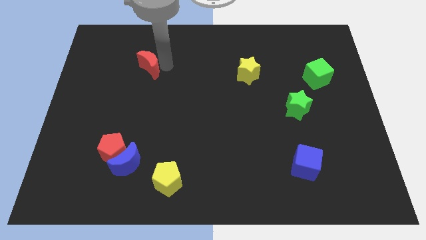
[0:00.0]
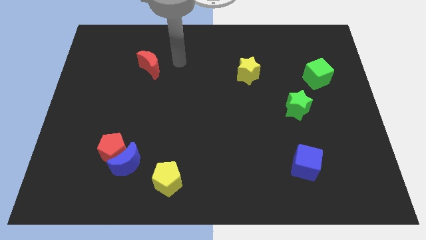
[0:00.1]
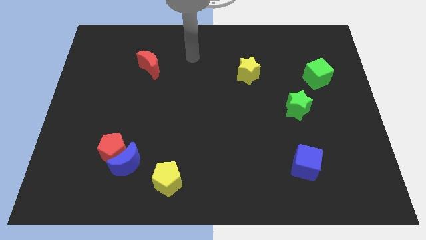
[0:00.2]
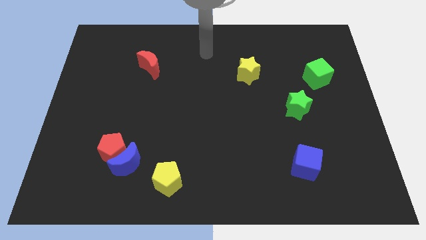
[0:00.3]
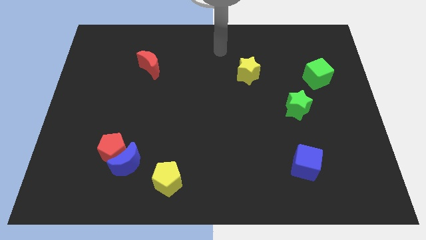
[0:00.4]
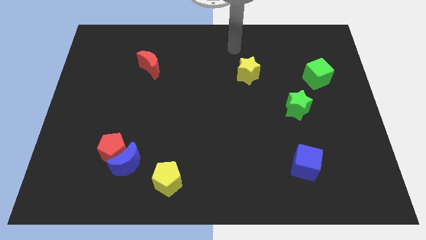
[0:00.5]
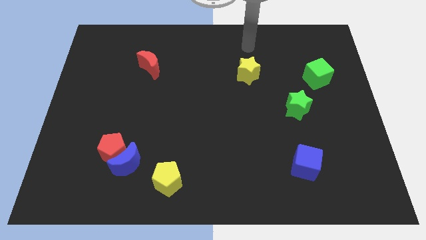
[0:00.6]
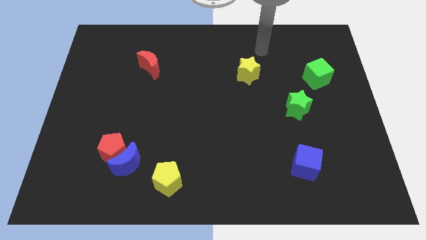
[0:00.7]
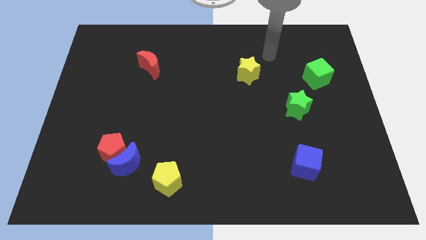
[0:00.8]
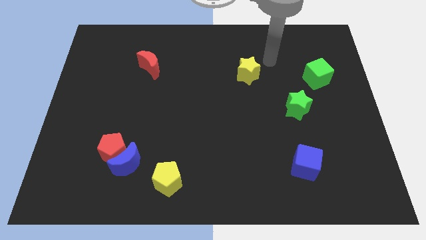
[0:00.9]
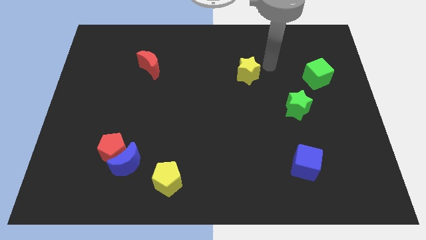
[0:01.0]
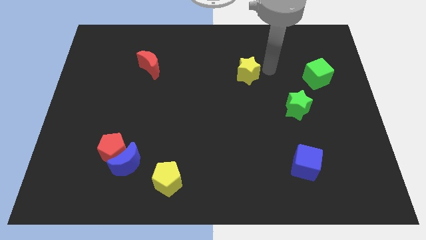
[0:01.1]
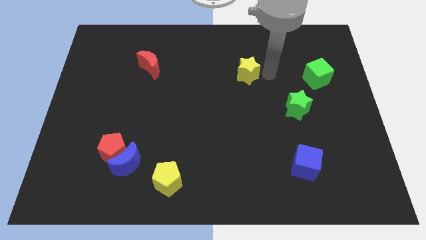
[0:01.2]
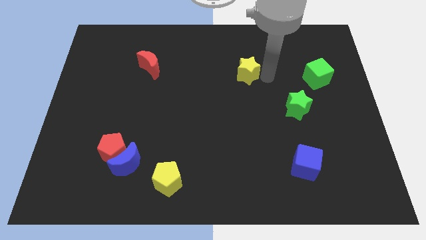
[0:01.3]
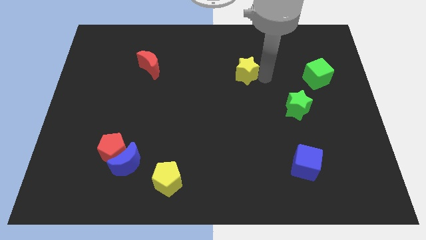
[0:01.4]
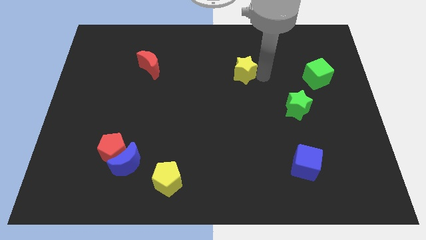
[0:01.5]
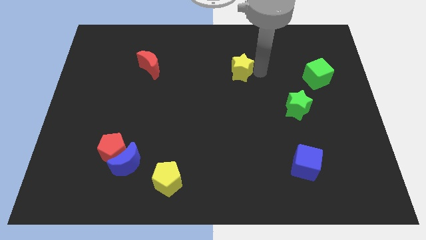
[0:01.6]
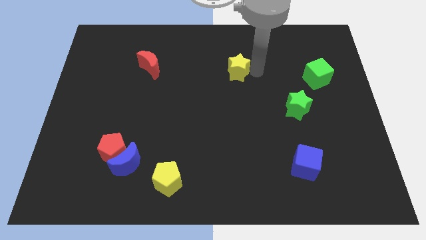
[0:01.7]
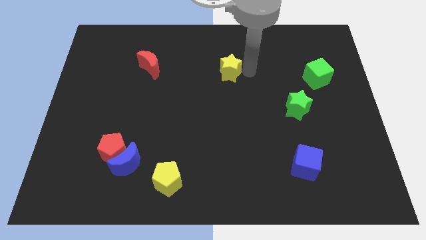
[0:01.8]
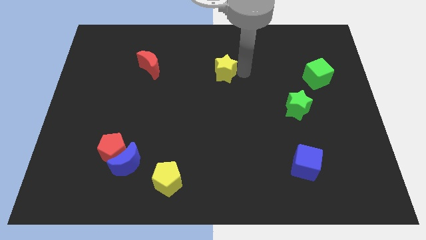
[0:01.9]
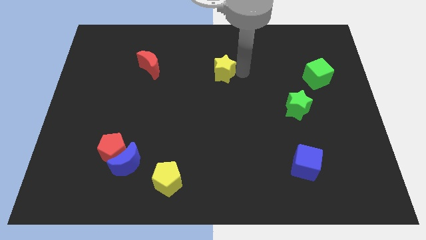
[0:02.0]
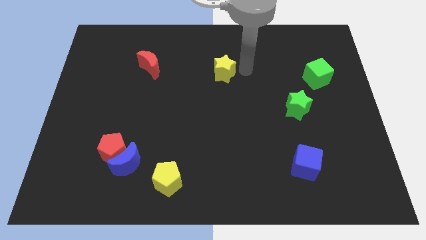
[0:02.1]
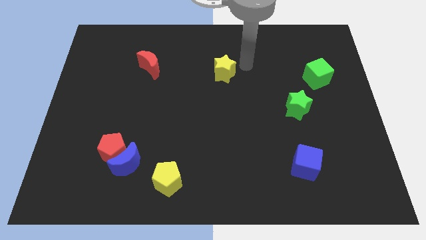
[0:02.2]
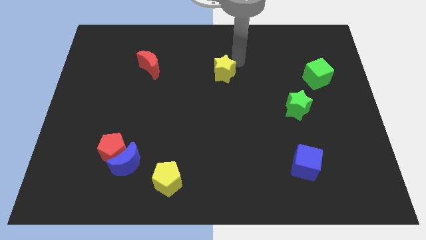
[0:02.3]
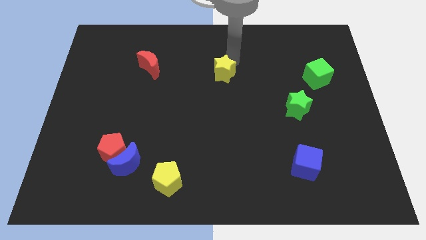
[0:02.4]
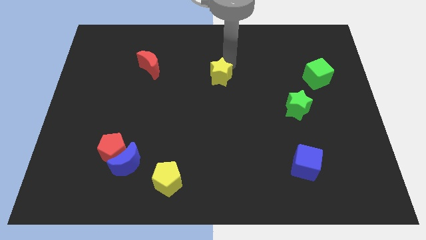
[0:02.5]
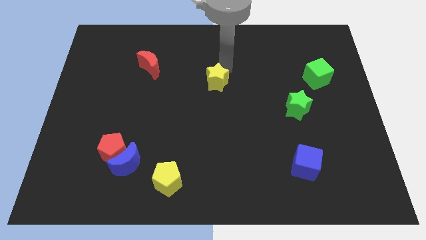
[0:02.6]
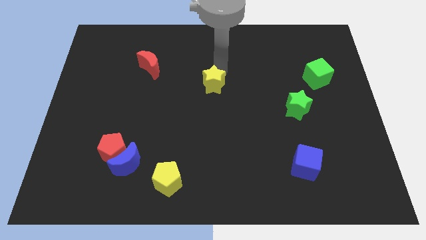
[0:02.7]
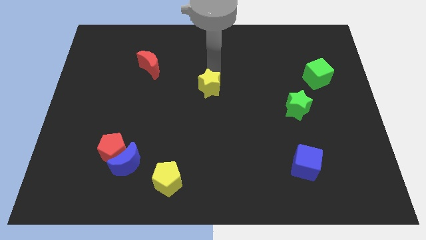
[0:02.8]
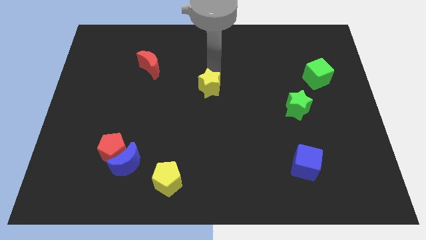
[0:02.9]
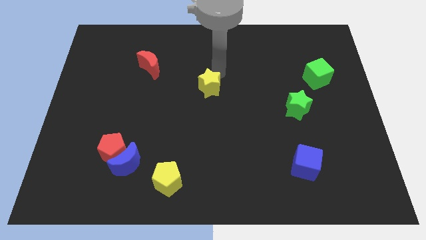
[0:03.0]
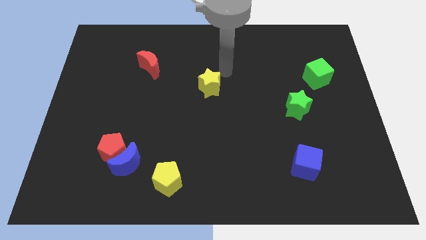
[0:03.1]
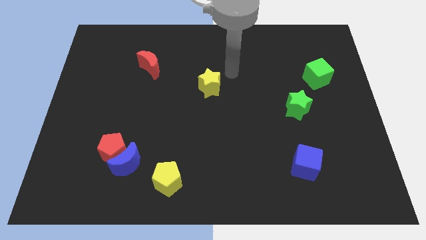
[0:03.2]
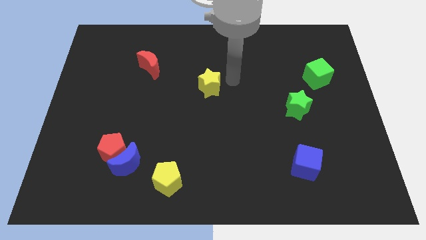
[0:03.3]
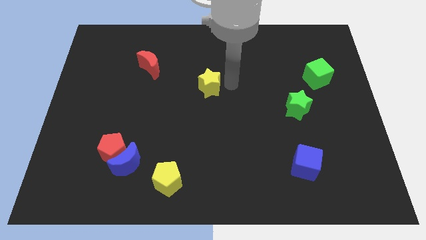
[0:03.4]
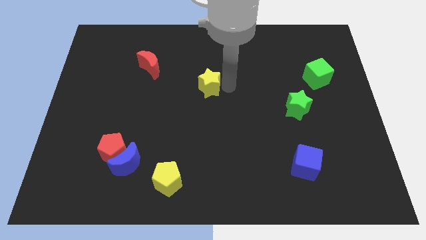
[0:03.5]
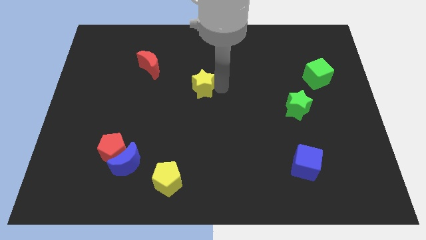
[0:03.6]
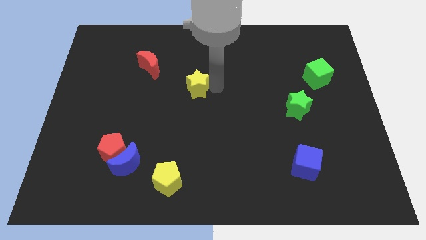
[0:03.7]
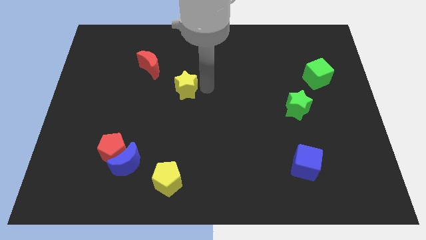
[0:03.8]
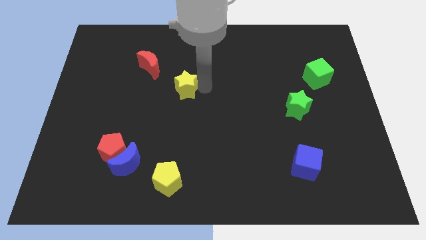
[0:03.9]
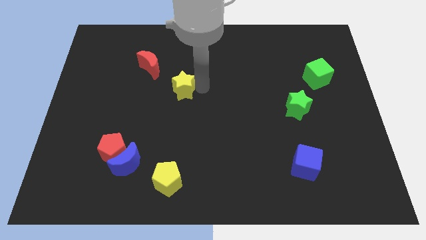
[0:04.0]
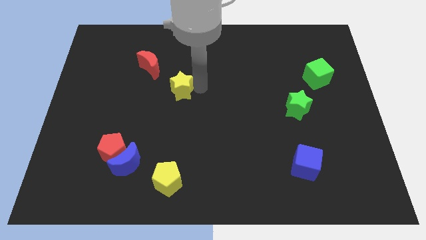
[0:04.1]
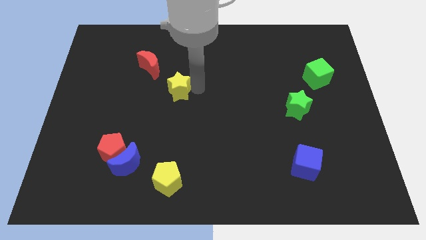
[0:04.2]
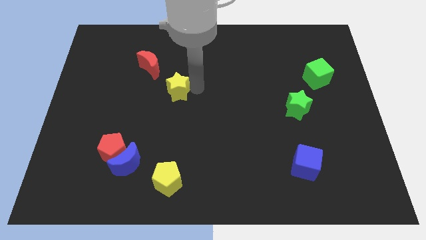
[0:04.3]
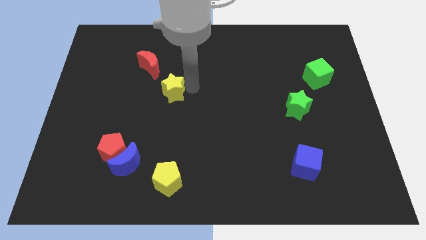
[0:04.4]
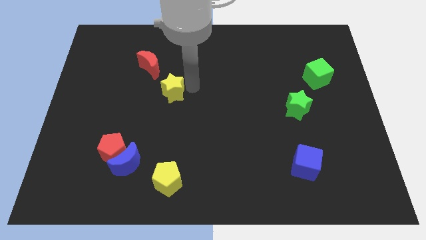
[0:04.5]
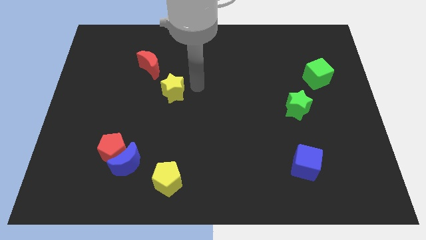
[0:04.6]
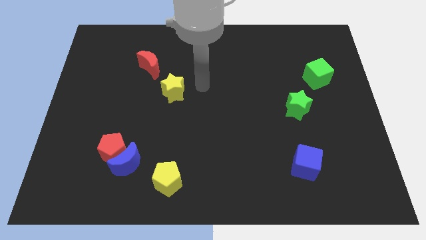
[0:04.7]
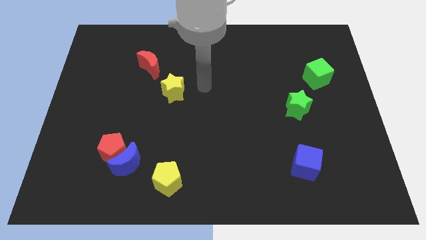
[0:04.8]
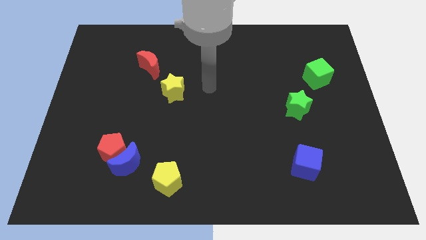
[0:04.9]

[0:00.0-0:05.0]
place the yellow star in a diagonal position to the red moon

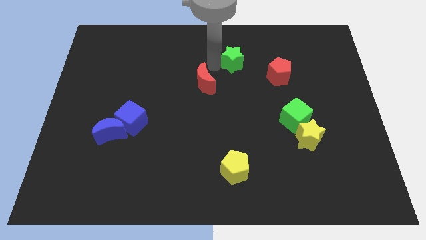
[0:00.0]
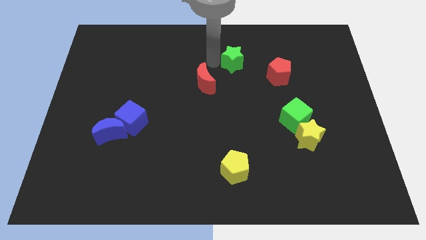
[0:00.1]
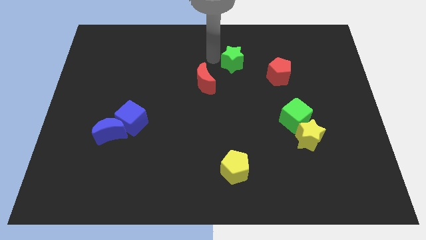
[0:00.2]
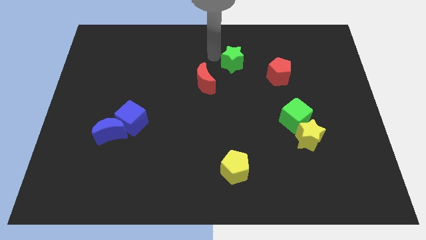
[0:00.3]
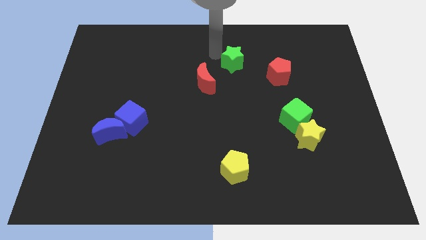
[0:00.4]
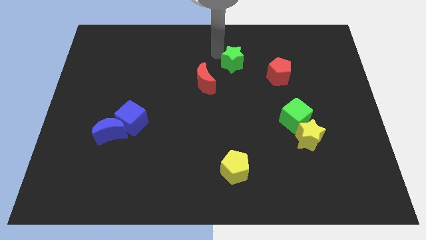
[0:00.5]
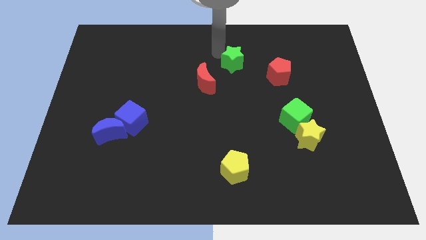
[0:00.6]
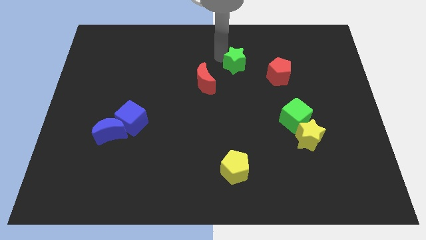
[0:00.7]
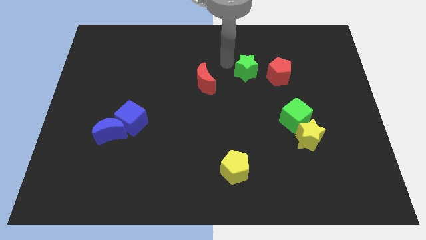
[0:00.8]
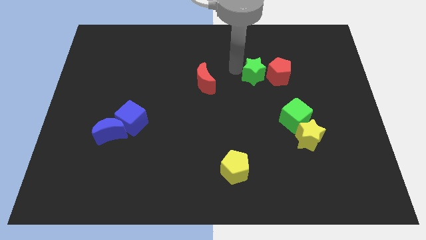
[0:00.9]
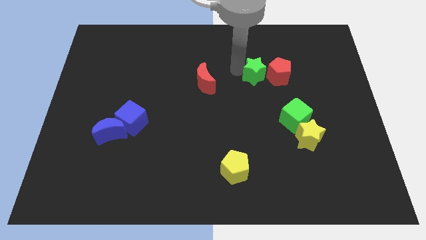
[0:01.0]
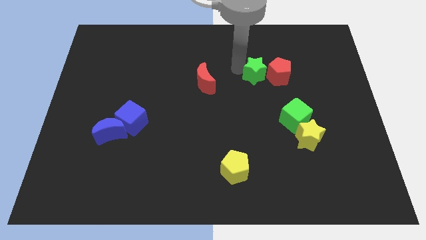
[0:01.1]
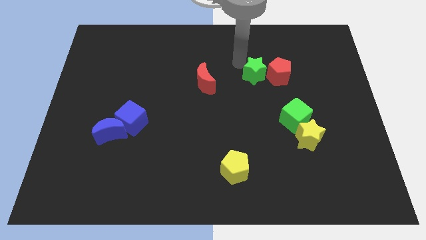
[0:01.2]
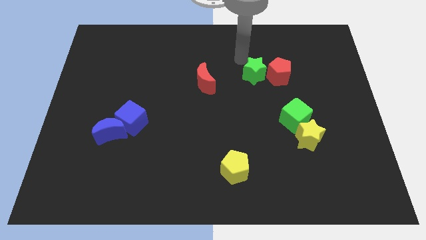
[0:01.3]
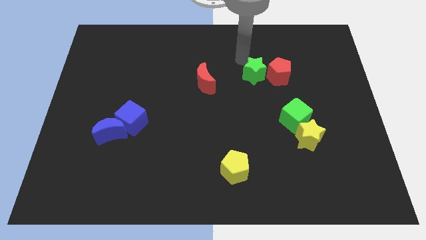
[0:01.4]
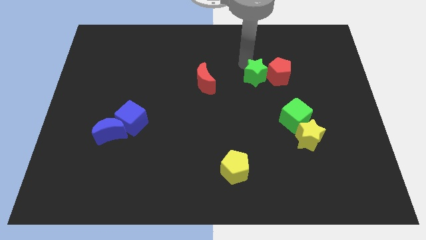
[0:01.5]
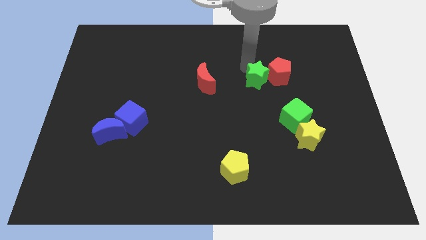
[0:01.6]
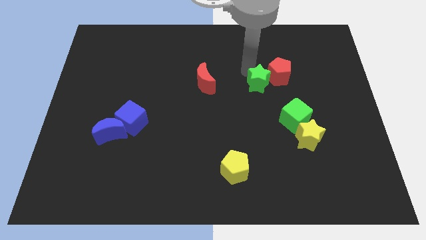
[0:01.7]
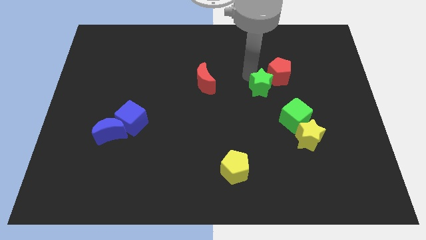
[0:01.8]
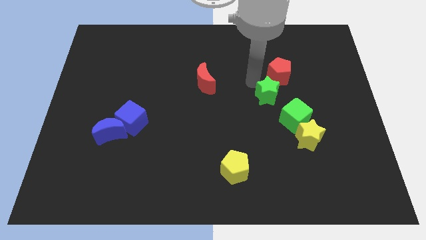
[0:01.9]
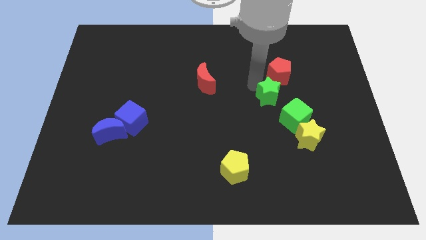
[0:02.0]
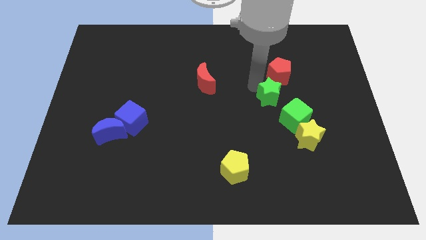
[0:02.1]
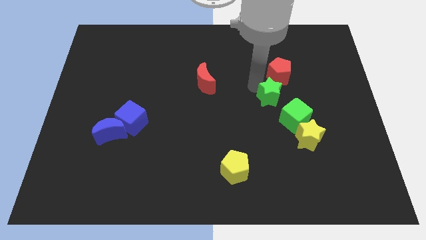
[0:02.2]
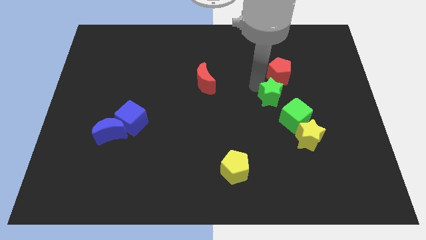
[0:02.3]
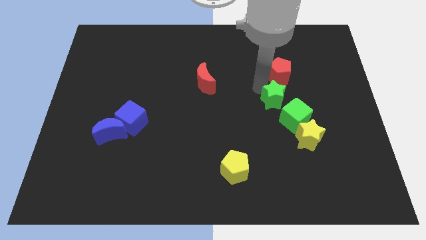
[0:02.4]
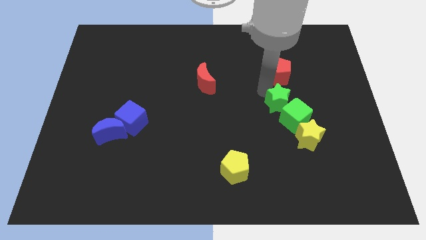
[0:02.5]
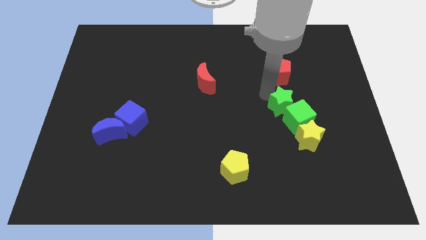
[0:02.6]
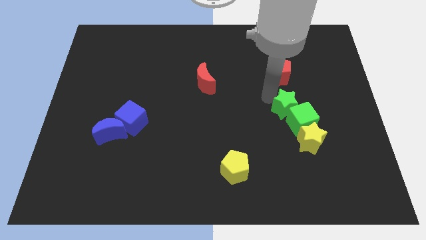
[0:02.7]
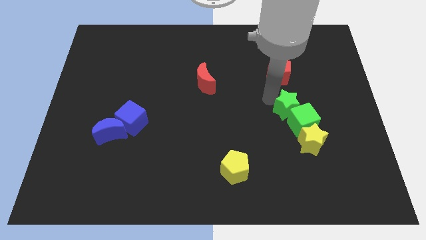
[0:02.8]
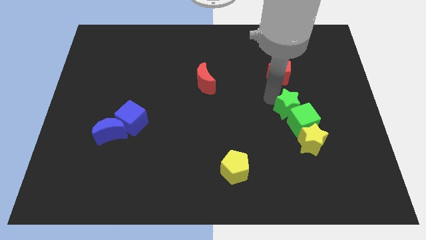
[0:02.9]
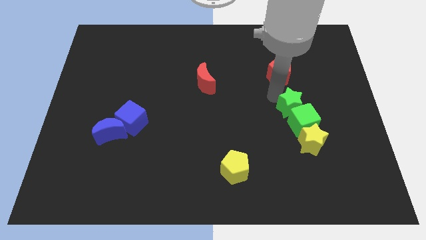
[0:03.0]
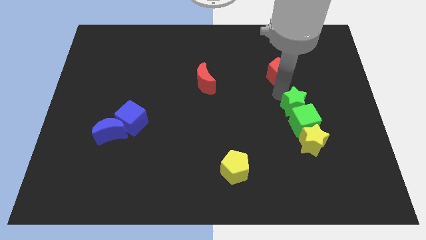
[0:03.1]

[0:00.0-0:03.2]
push the green star into the green cube

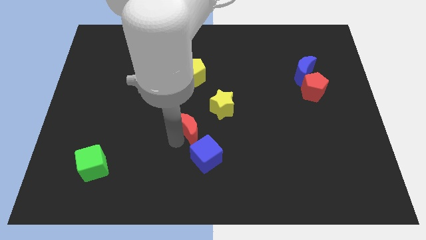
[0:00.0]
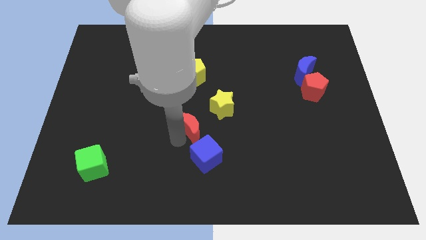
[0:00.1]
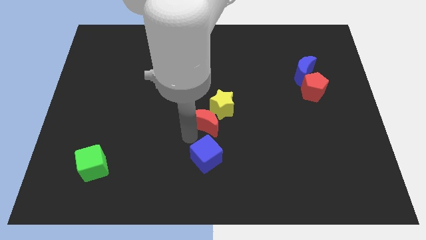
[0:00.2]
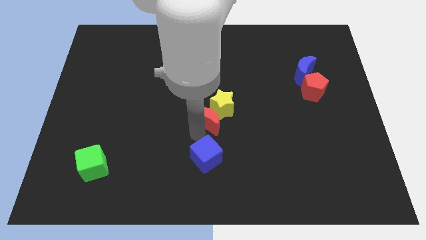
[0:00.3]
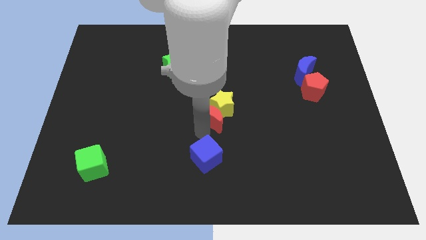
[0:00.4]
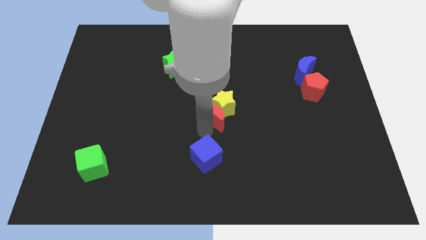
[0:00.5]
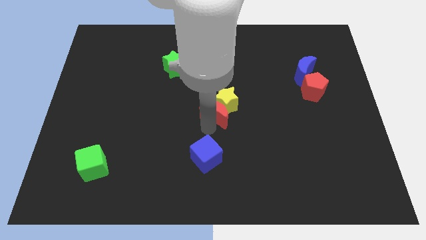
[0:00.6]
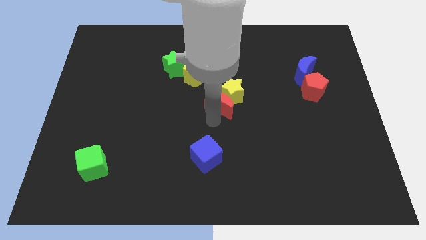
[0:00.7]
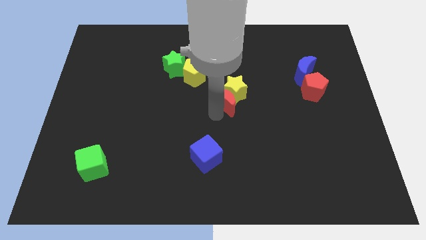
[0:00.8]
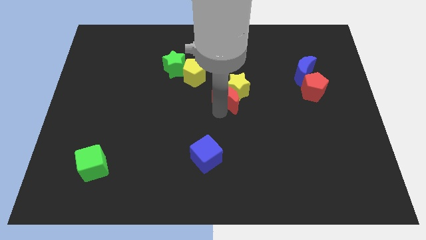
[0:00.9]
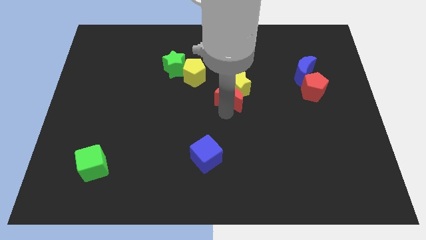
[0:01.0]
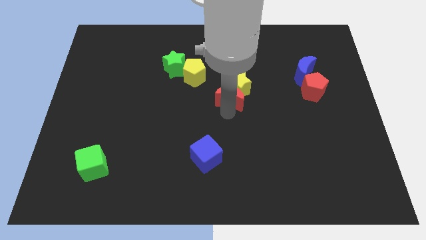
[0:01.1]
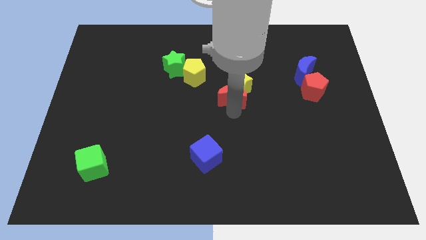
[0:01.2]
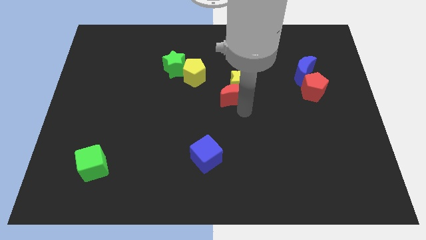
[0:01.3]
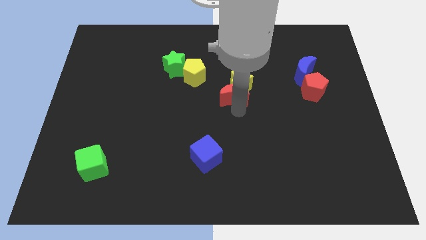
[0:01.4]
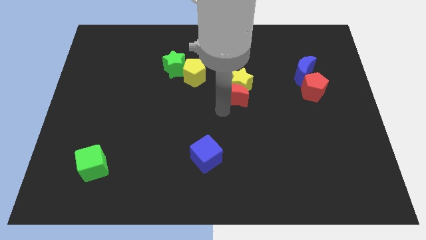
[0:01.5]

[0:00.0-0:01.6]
push the red moon and yellow star upwards
